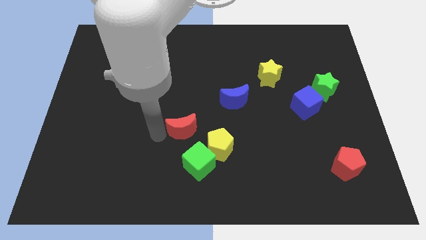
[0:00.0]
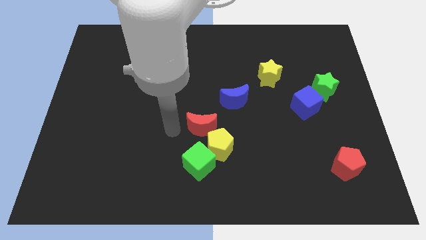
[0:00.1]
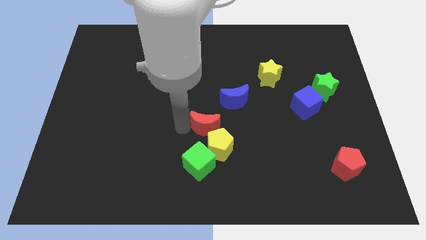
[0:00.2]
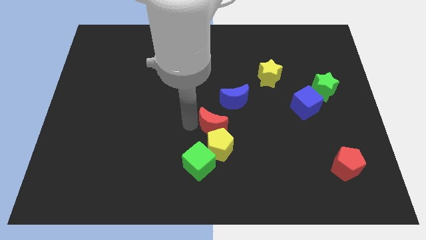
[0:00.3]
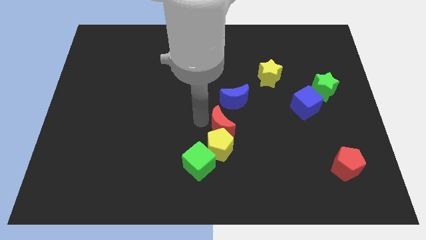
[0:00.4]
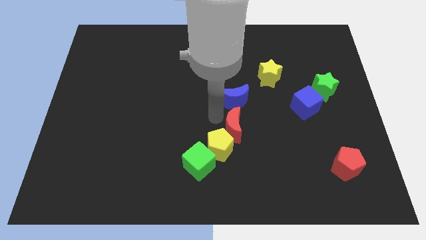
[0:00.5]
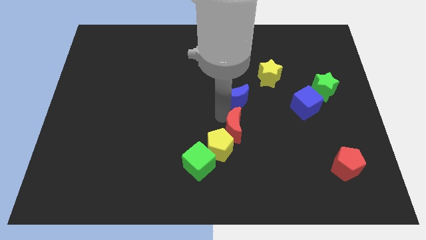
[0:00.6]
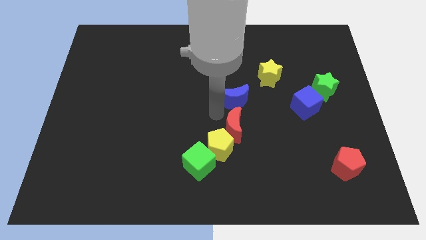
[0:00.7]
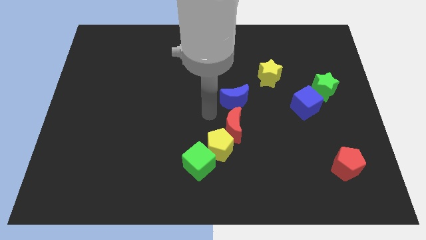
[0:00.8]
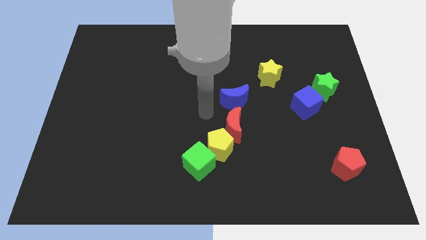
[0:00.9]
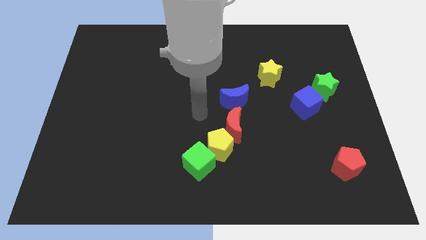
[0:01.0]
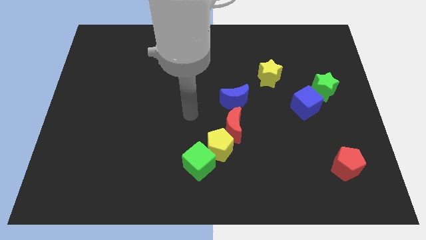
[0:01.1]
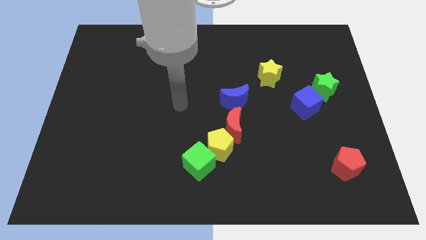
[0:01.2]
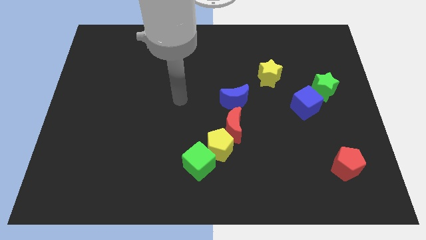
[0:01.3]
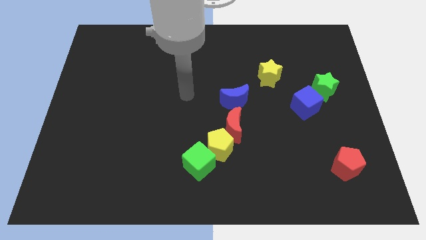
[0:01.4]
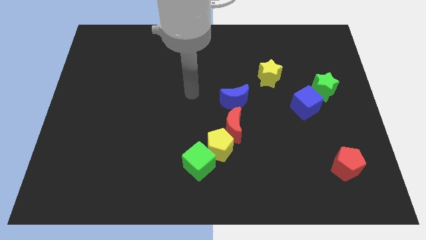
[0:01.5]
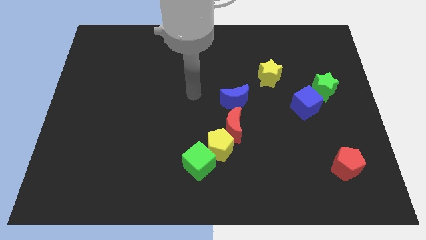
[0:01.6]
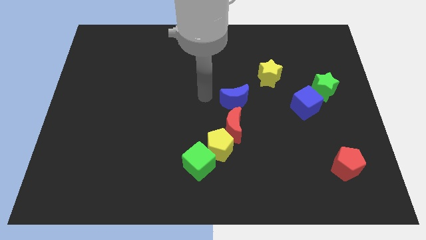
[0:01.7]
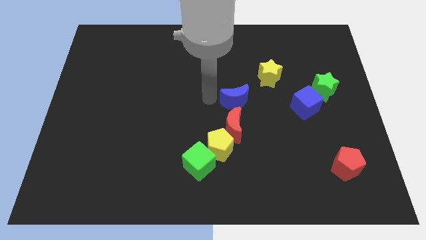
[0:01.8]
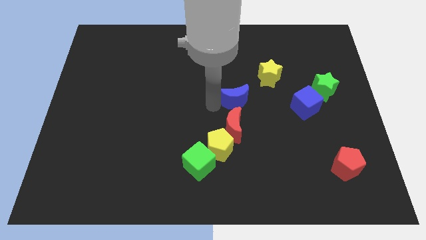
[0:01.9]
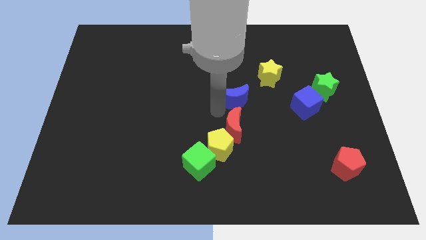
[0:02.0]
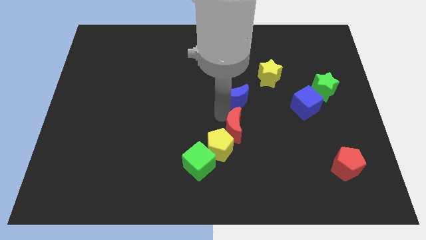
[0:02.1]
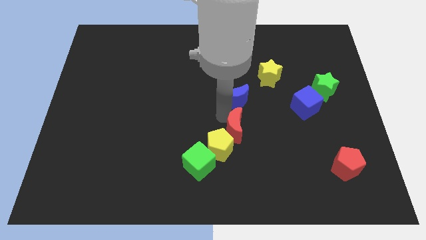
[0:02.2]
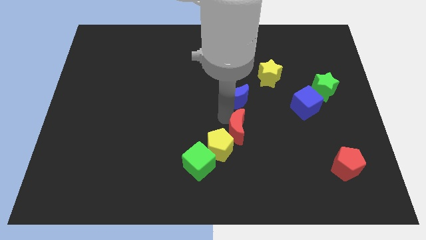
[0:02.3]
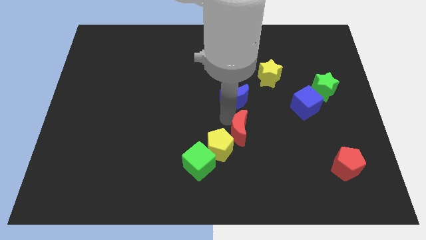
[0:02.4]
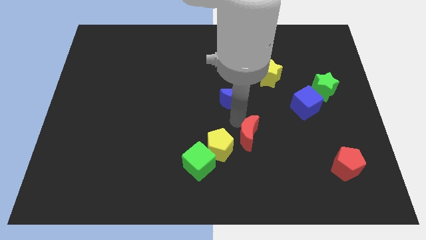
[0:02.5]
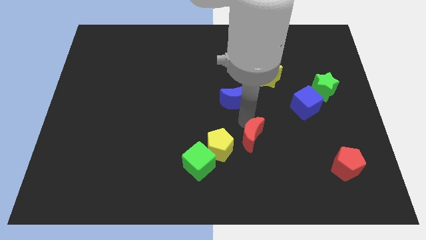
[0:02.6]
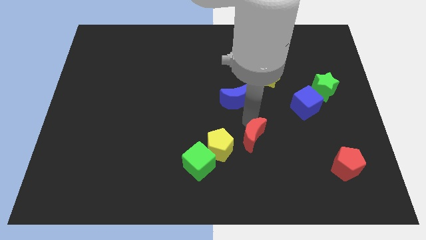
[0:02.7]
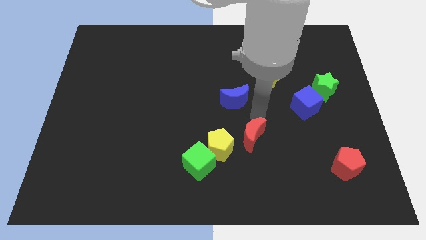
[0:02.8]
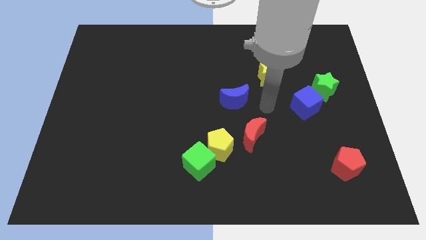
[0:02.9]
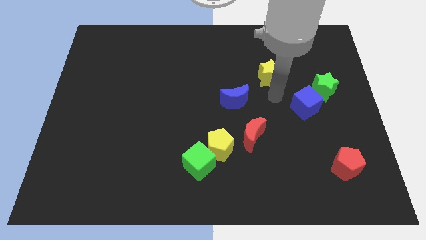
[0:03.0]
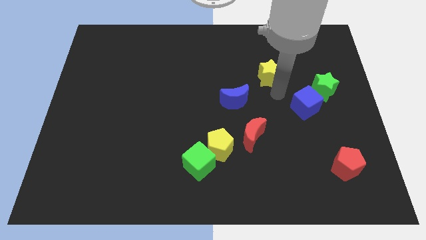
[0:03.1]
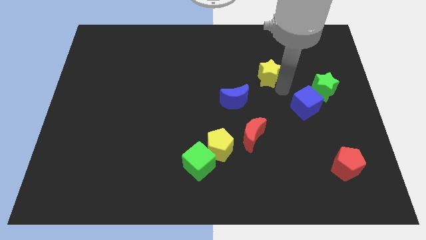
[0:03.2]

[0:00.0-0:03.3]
slightly push the red crescent to the right of yellow pentagon

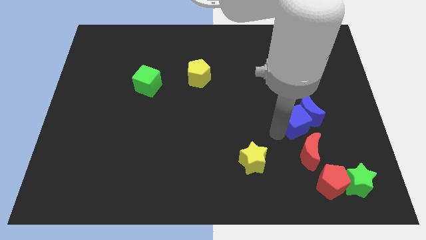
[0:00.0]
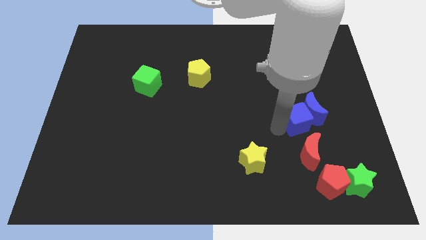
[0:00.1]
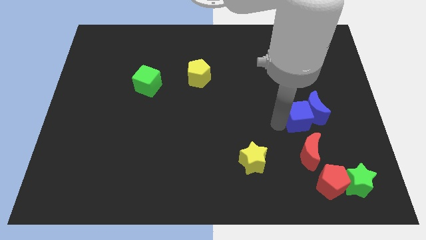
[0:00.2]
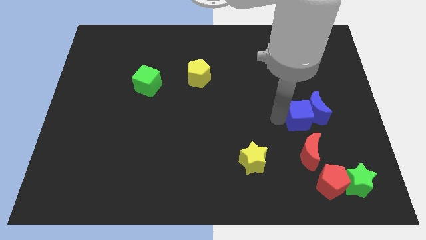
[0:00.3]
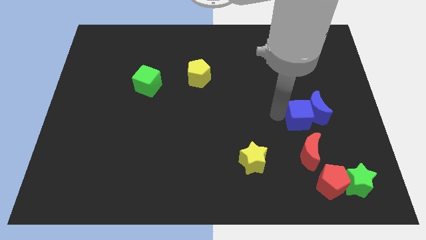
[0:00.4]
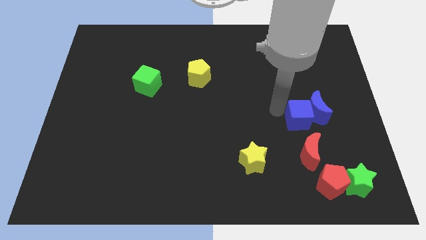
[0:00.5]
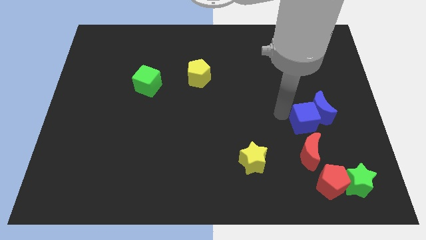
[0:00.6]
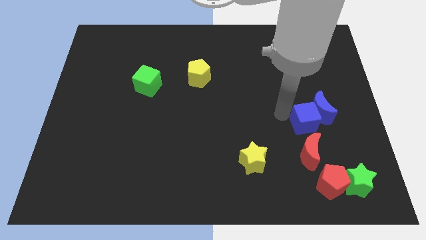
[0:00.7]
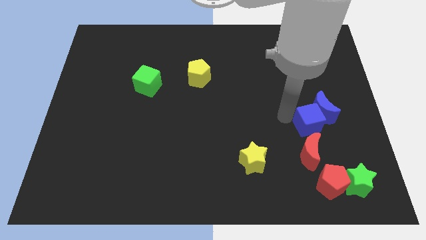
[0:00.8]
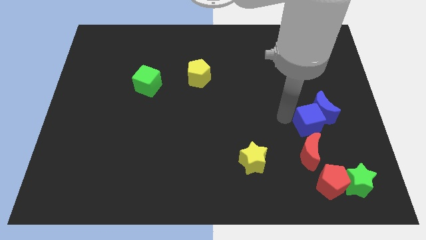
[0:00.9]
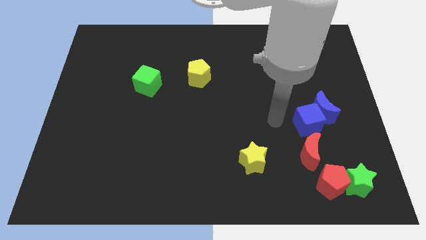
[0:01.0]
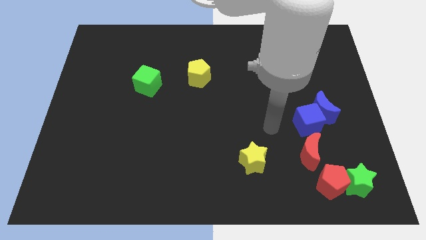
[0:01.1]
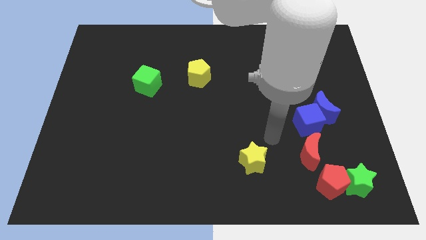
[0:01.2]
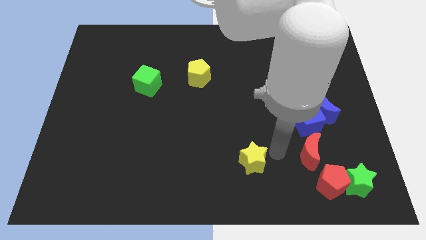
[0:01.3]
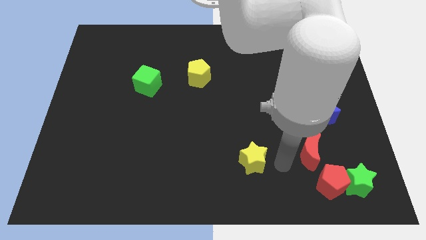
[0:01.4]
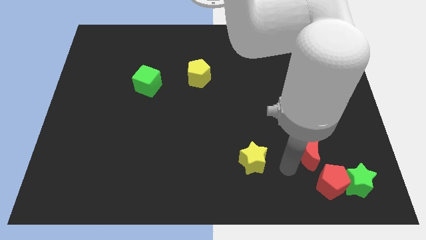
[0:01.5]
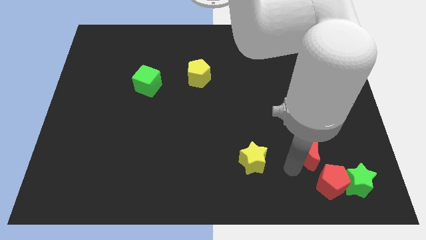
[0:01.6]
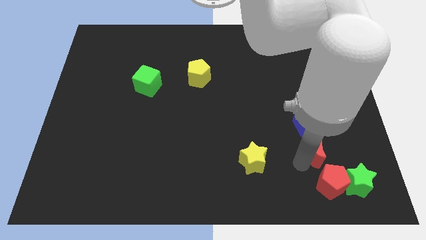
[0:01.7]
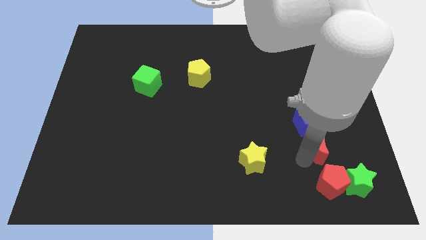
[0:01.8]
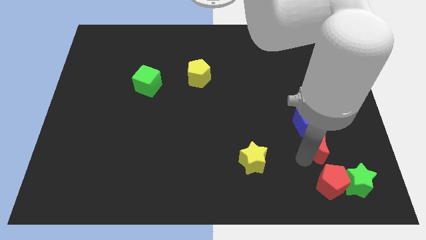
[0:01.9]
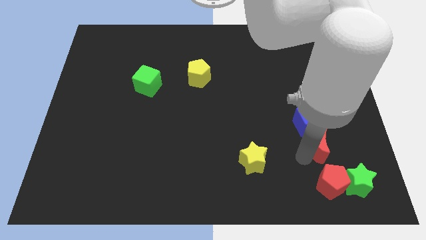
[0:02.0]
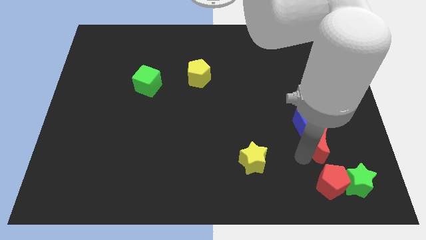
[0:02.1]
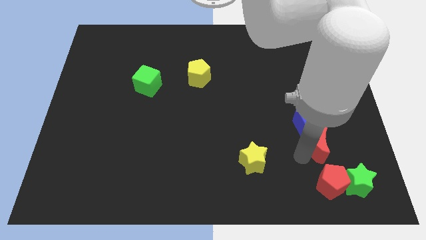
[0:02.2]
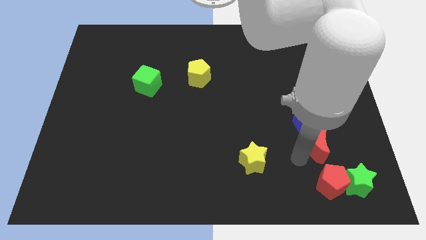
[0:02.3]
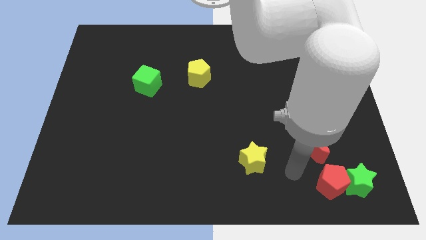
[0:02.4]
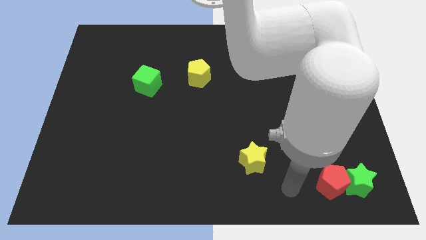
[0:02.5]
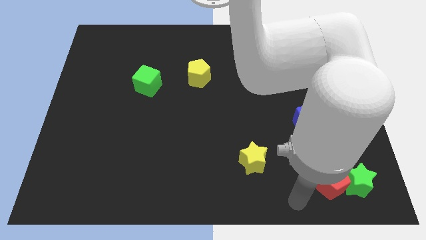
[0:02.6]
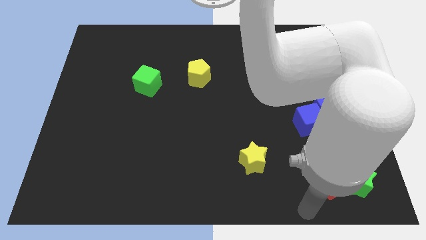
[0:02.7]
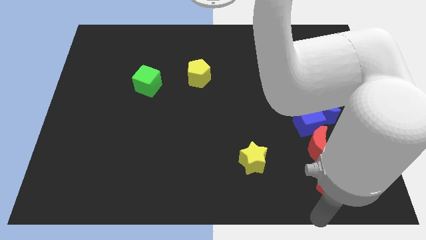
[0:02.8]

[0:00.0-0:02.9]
adjust the red moon to the bottom of the blue cube

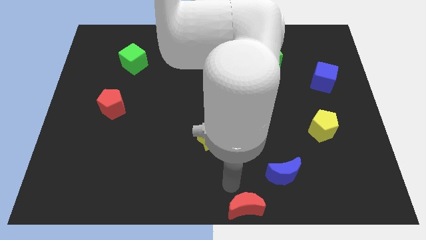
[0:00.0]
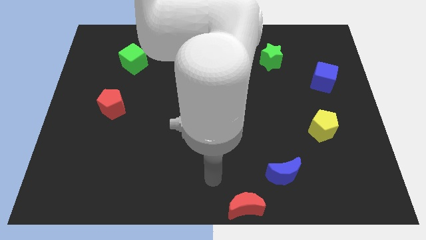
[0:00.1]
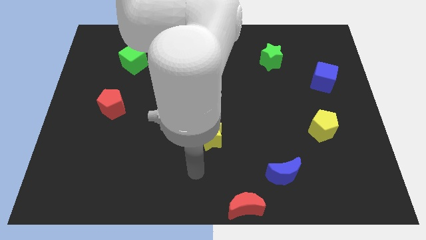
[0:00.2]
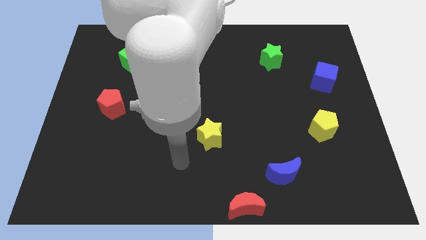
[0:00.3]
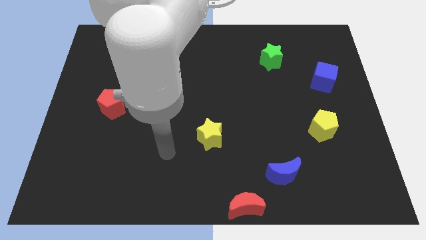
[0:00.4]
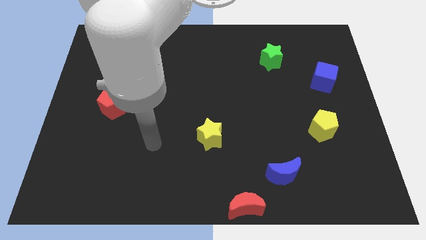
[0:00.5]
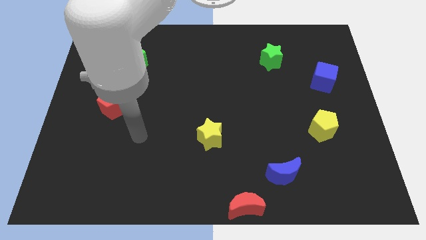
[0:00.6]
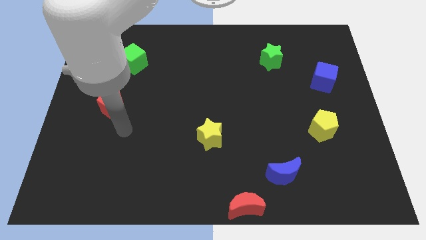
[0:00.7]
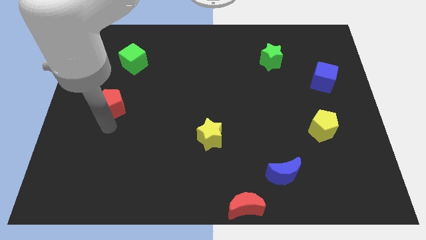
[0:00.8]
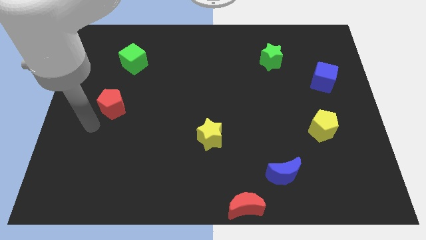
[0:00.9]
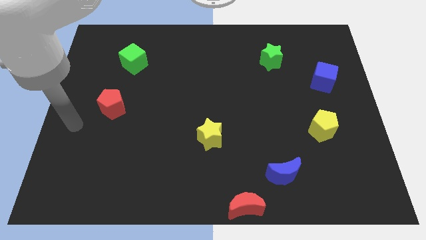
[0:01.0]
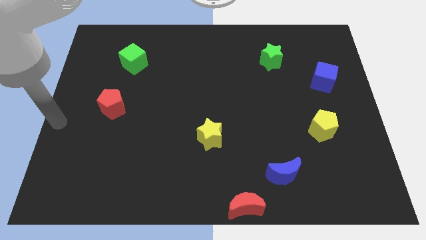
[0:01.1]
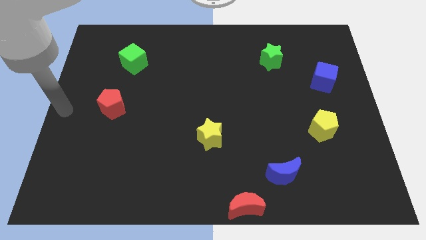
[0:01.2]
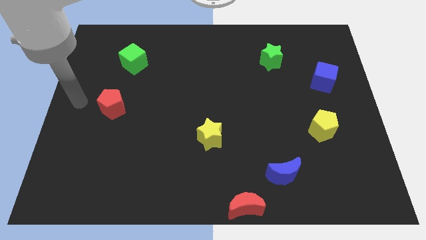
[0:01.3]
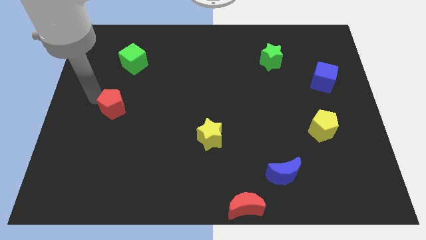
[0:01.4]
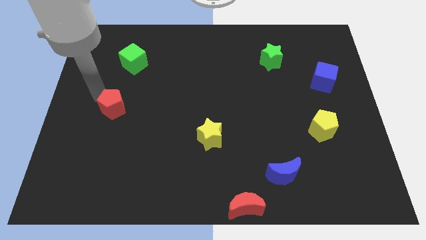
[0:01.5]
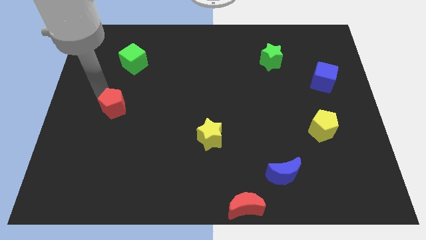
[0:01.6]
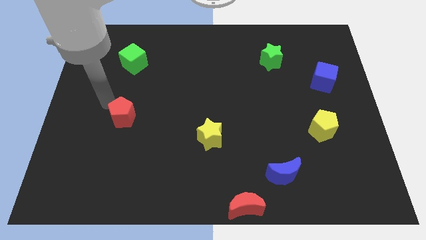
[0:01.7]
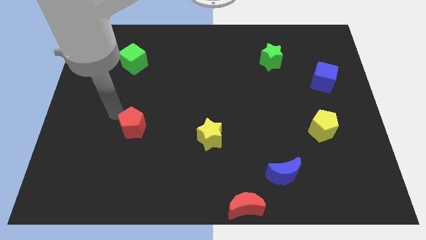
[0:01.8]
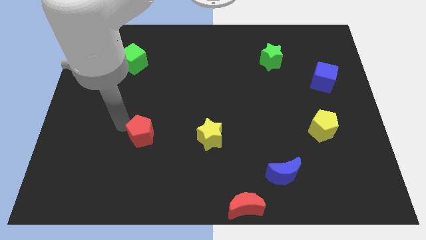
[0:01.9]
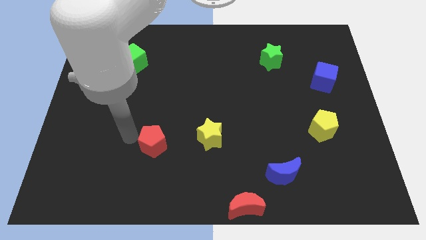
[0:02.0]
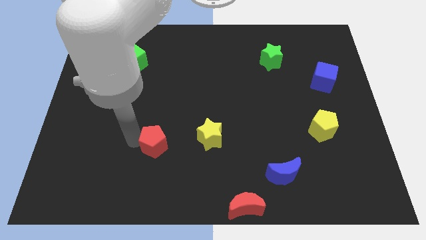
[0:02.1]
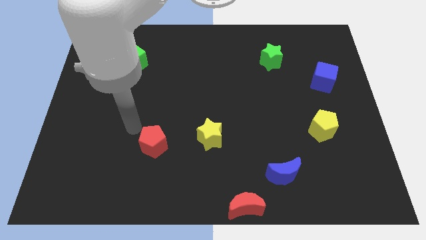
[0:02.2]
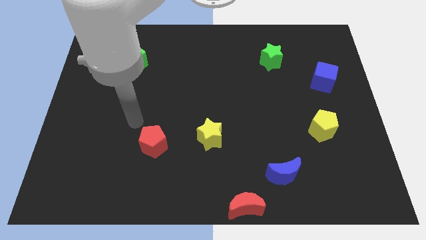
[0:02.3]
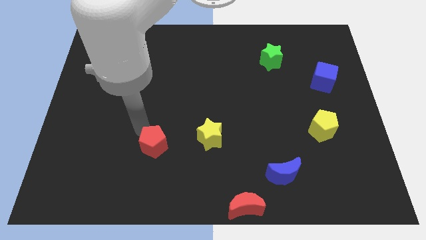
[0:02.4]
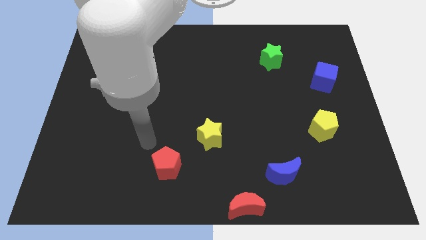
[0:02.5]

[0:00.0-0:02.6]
place the red pentagon left to the yellow star

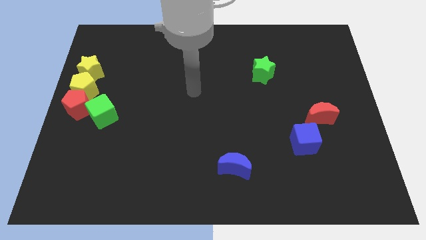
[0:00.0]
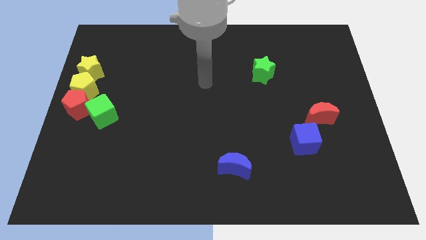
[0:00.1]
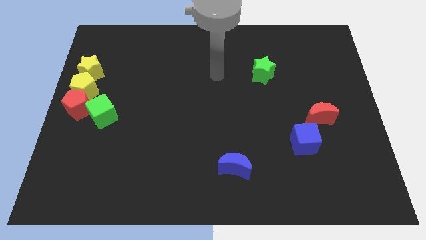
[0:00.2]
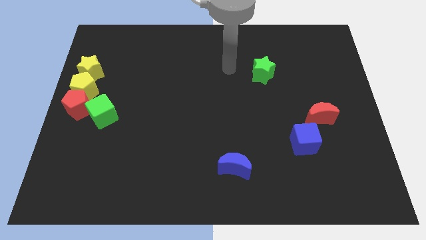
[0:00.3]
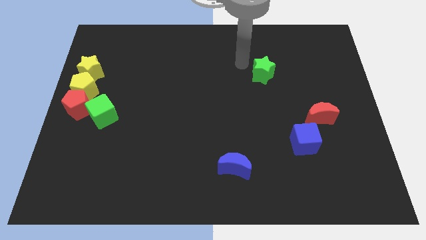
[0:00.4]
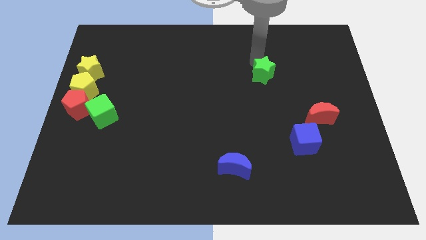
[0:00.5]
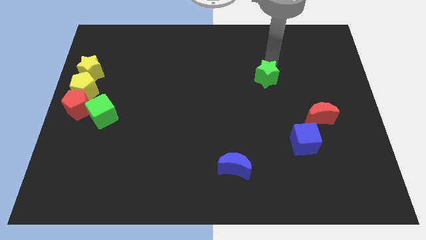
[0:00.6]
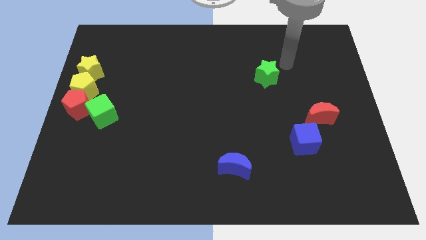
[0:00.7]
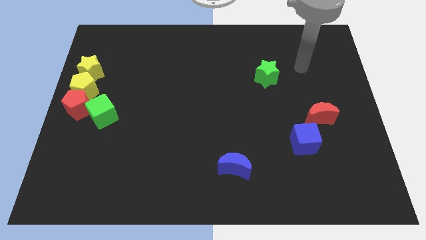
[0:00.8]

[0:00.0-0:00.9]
slightly touch the green star
